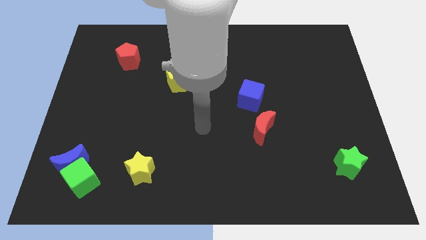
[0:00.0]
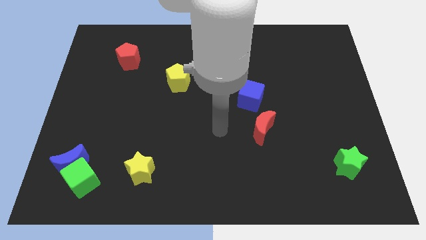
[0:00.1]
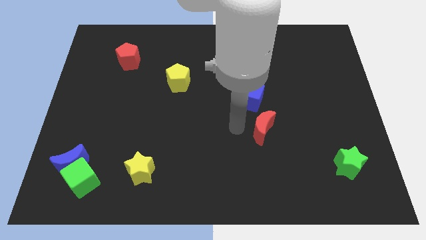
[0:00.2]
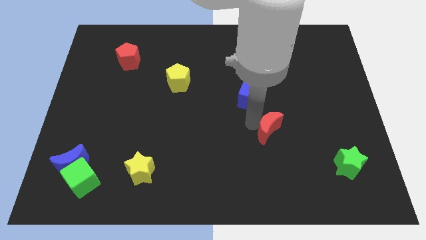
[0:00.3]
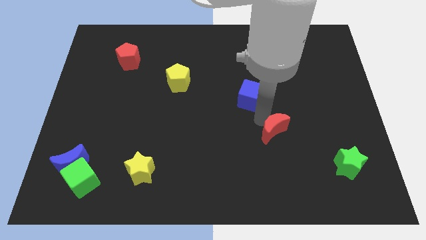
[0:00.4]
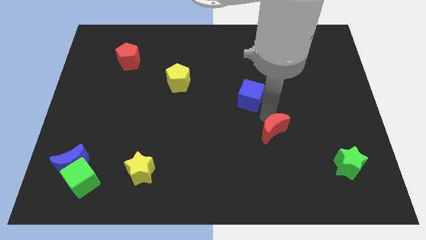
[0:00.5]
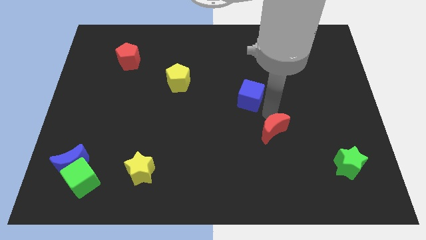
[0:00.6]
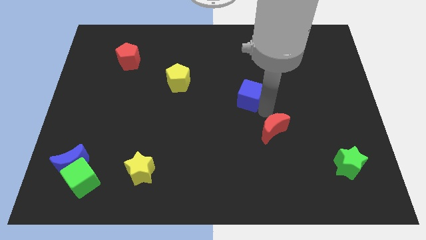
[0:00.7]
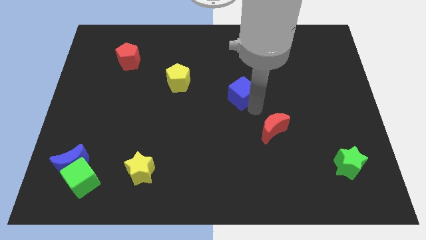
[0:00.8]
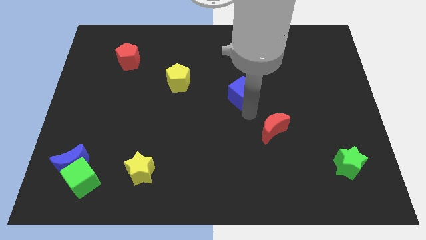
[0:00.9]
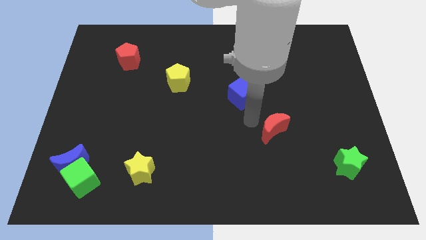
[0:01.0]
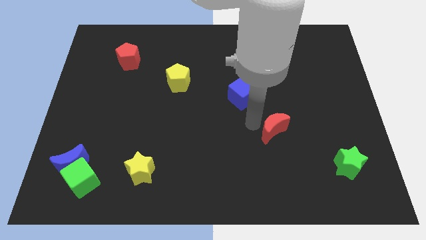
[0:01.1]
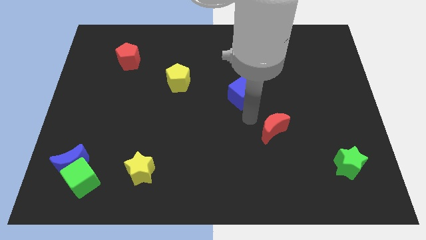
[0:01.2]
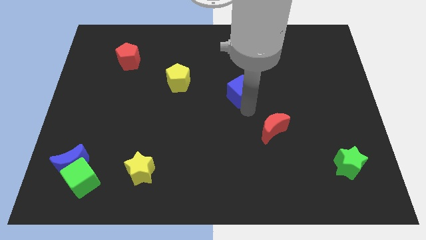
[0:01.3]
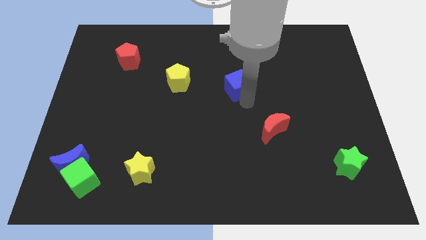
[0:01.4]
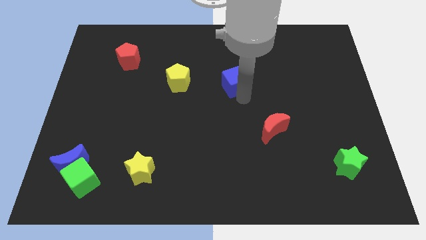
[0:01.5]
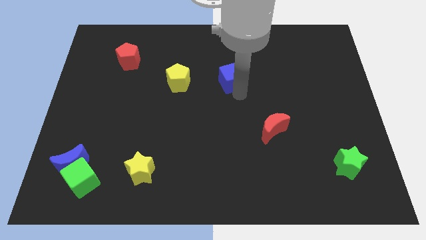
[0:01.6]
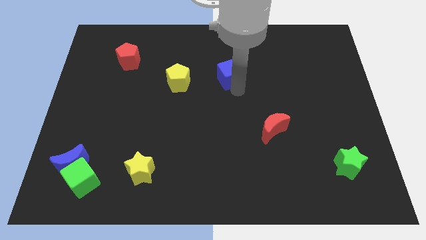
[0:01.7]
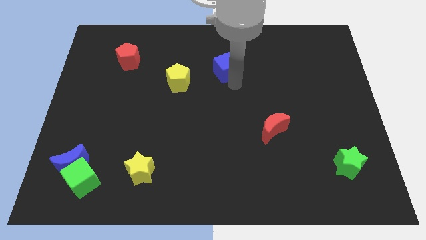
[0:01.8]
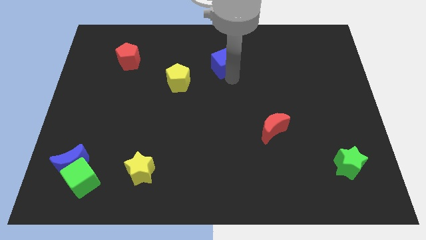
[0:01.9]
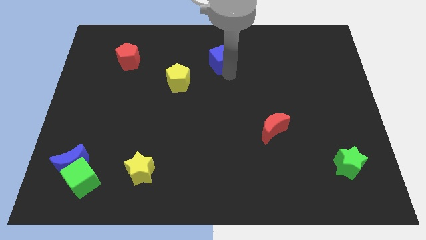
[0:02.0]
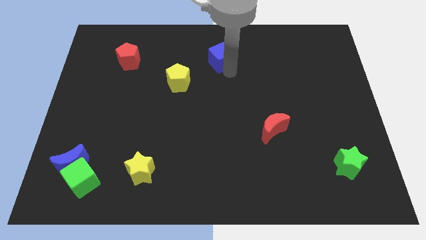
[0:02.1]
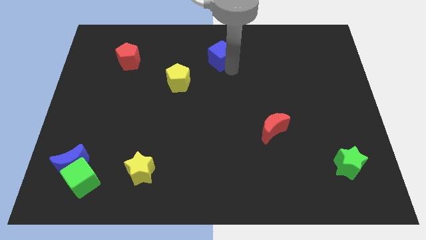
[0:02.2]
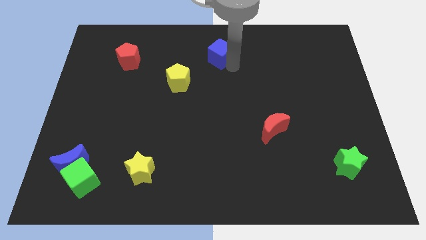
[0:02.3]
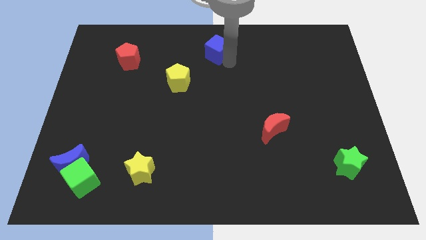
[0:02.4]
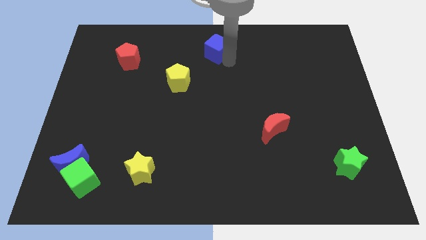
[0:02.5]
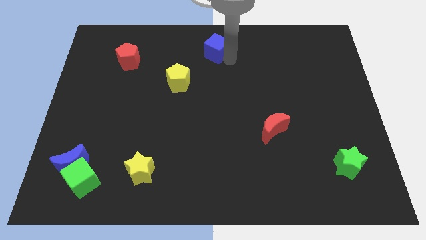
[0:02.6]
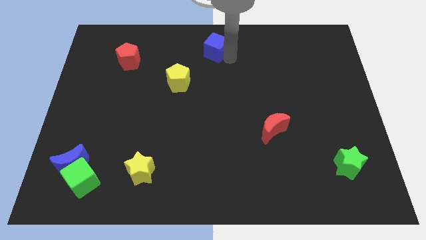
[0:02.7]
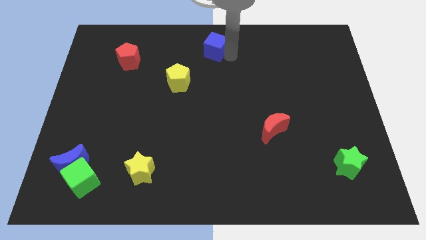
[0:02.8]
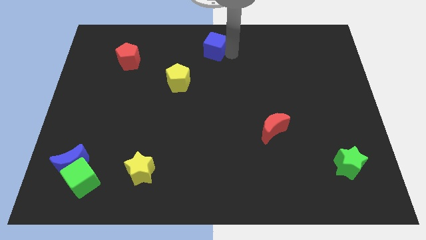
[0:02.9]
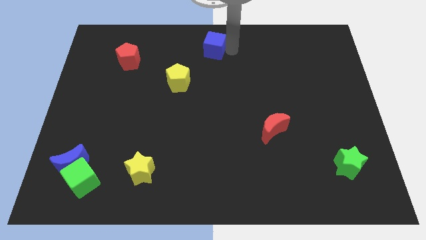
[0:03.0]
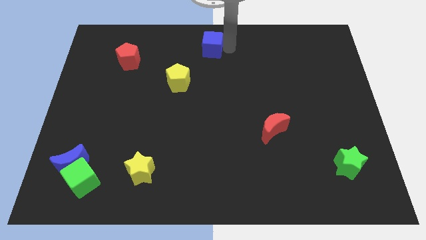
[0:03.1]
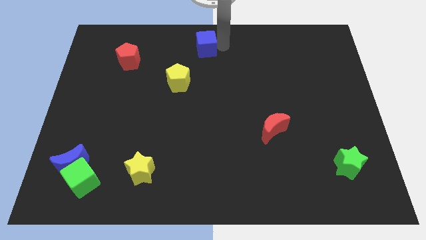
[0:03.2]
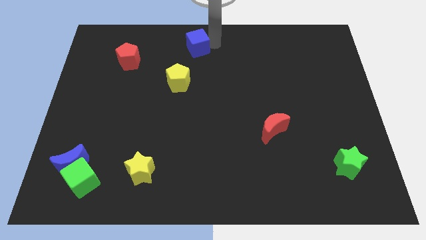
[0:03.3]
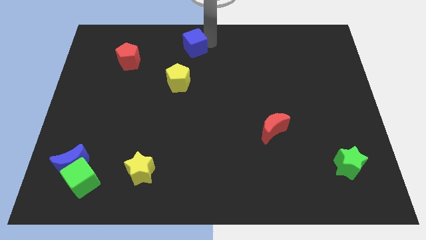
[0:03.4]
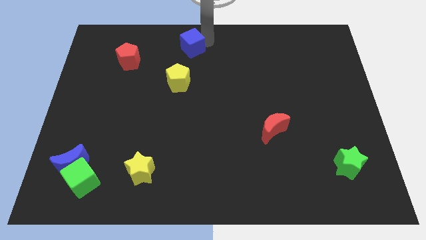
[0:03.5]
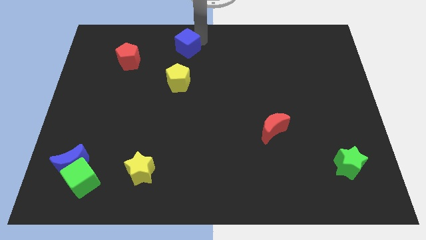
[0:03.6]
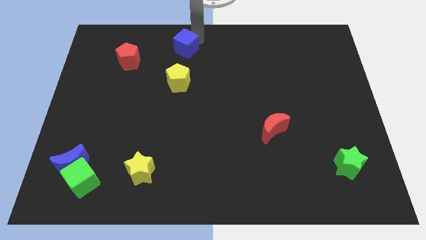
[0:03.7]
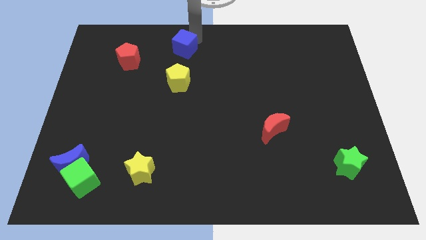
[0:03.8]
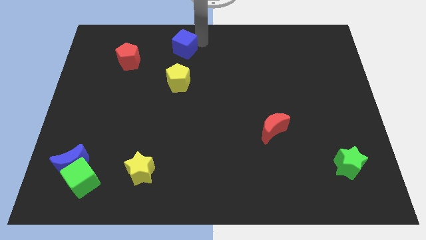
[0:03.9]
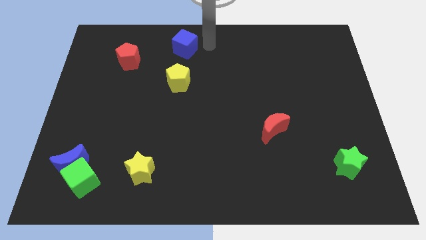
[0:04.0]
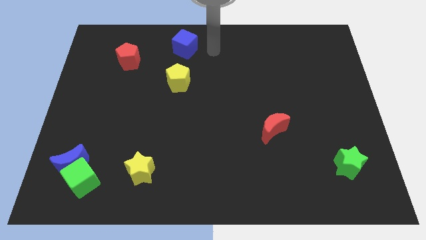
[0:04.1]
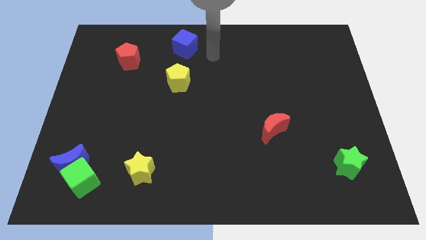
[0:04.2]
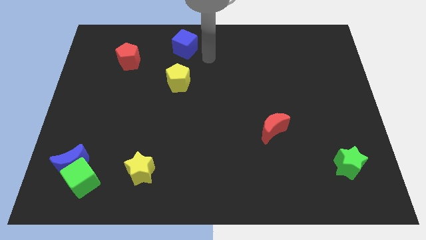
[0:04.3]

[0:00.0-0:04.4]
move the blue cube to the top side of the yellow pentagon

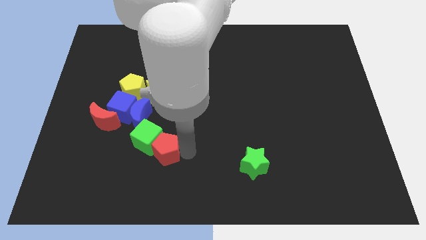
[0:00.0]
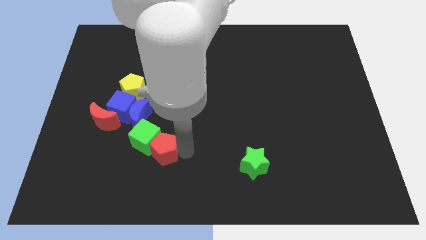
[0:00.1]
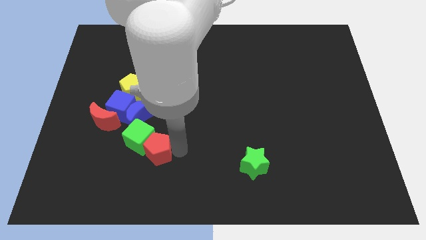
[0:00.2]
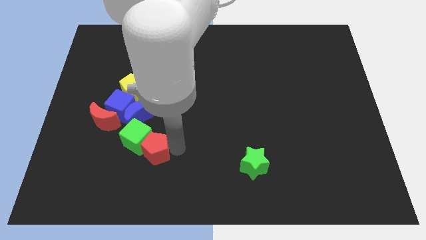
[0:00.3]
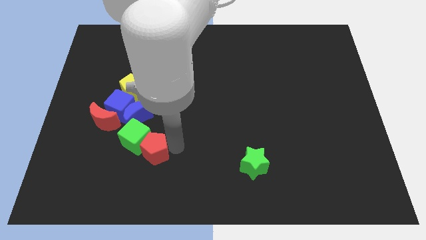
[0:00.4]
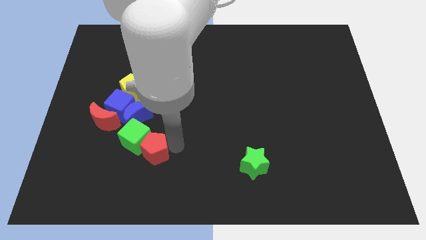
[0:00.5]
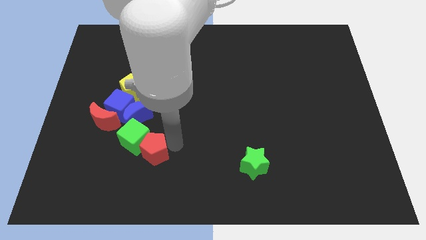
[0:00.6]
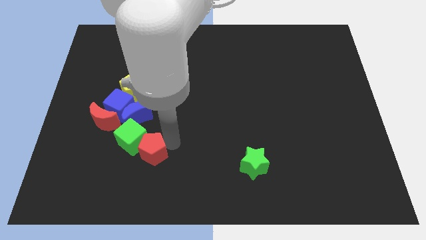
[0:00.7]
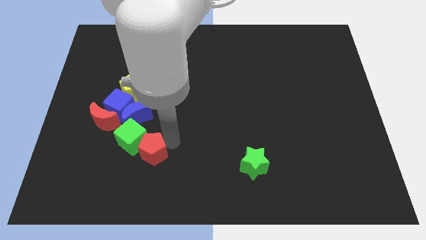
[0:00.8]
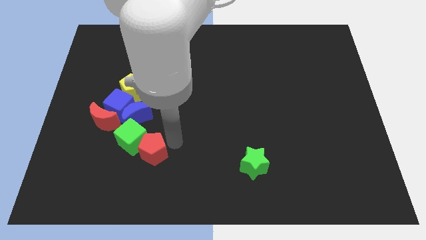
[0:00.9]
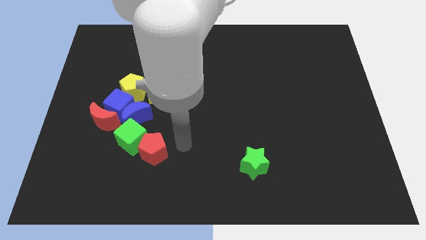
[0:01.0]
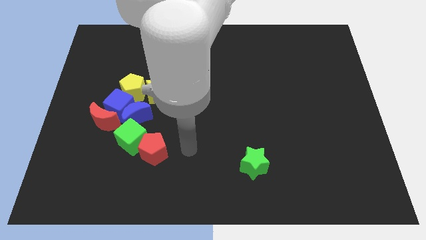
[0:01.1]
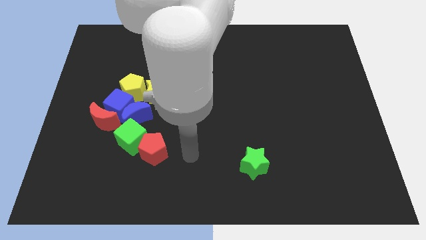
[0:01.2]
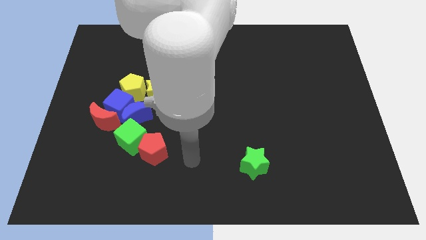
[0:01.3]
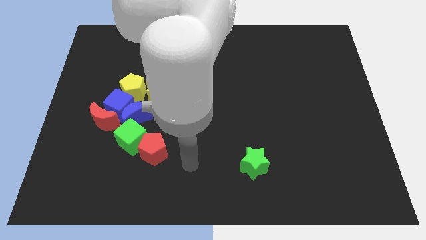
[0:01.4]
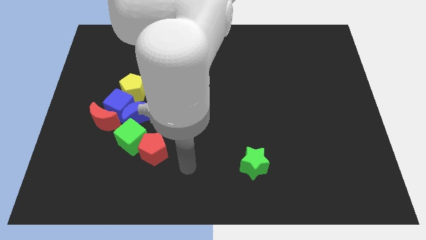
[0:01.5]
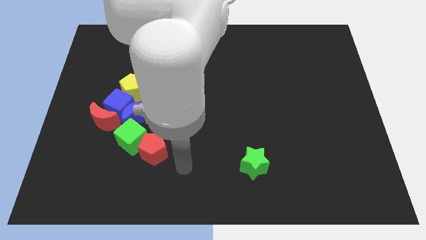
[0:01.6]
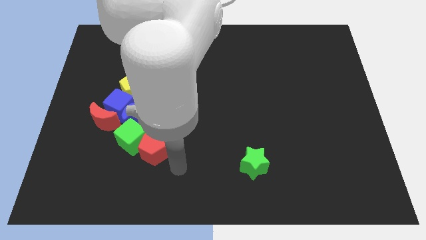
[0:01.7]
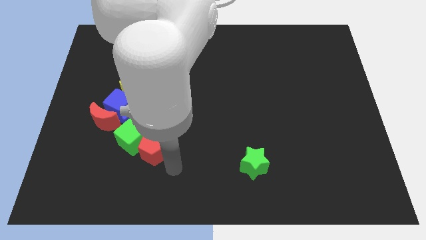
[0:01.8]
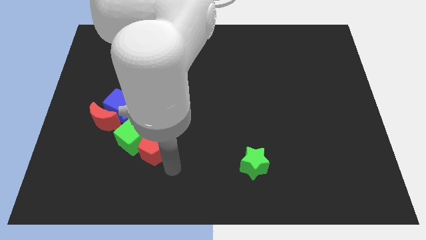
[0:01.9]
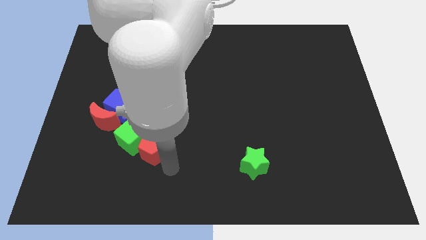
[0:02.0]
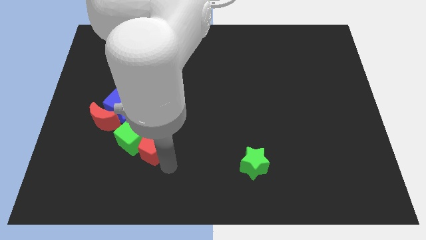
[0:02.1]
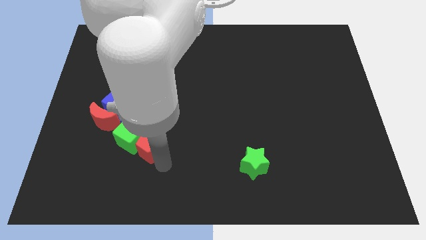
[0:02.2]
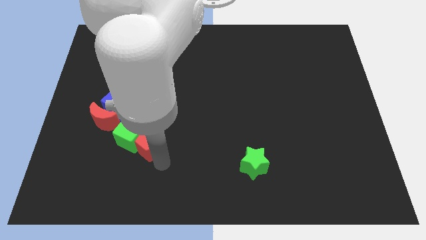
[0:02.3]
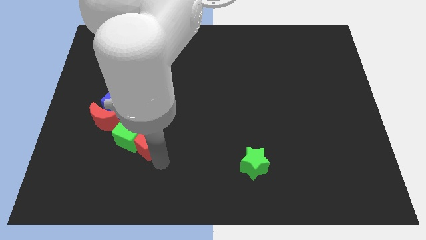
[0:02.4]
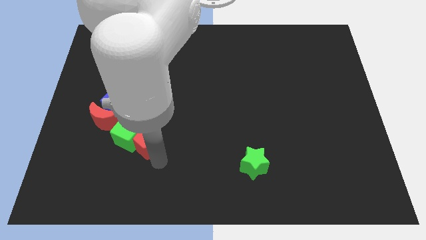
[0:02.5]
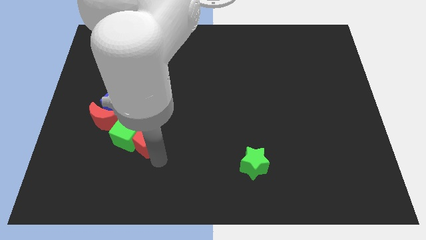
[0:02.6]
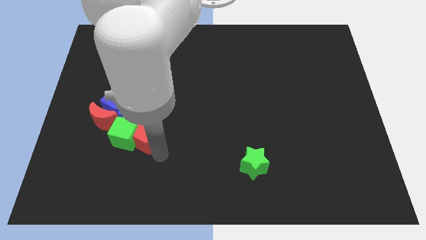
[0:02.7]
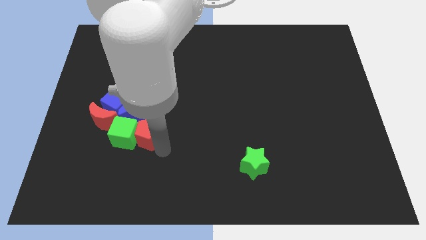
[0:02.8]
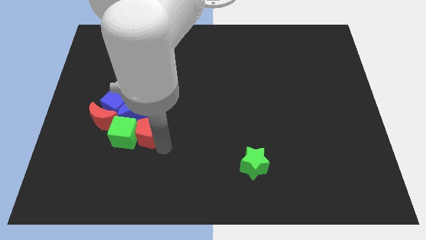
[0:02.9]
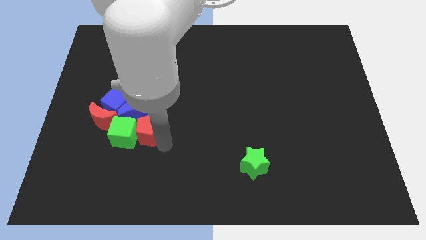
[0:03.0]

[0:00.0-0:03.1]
push red pentagon to the left side

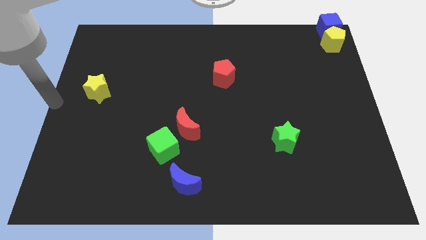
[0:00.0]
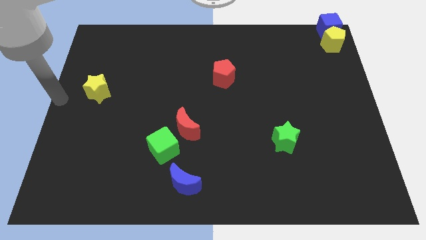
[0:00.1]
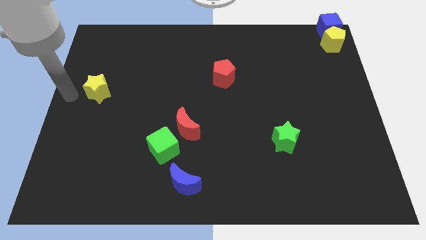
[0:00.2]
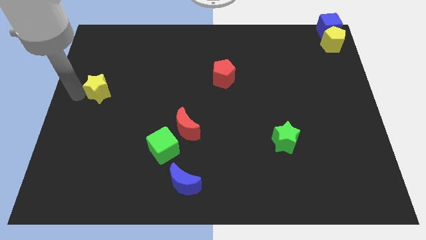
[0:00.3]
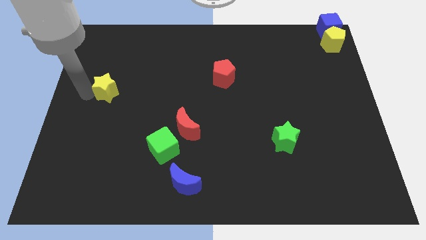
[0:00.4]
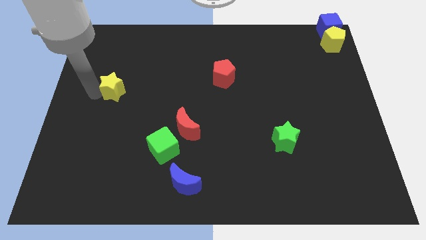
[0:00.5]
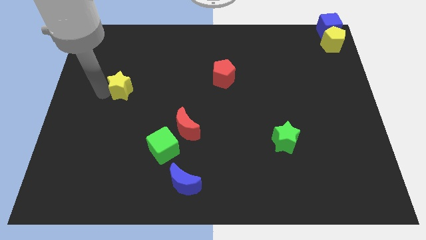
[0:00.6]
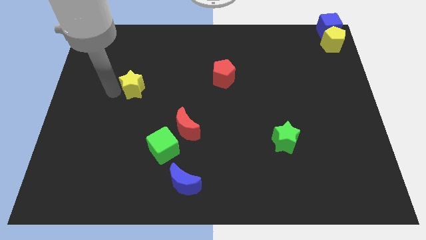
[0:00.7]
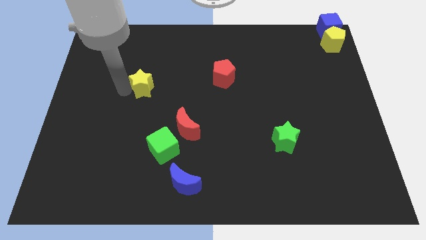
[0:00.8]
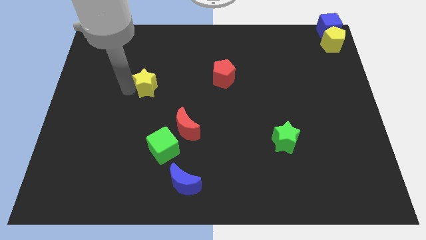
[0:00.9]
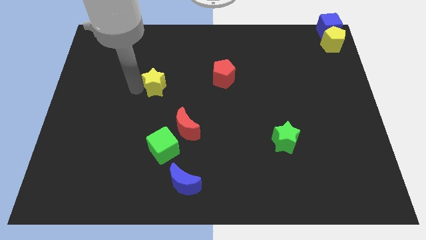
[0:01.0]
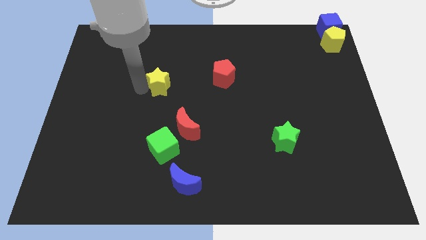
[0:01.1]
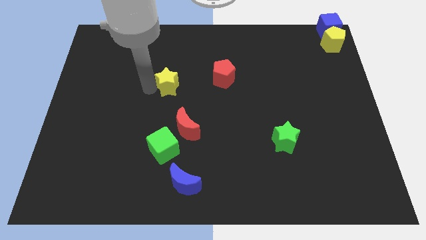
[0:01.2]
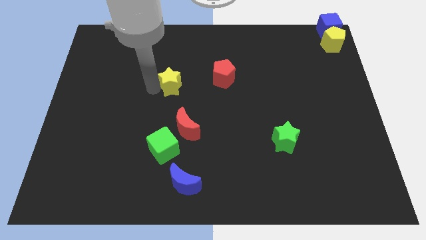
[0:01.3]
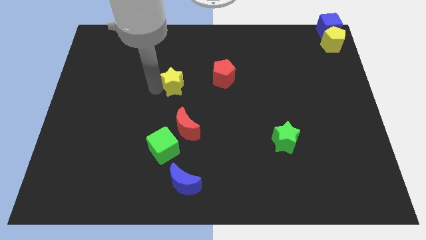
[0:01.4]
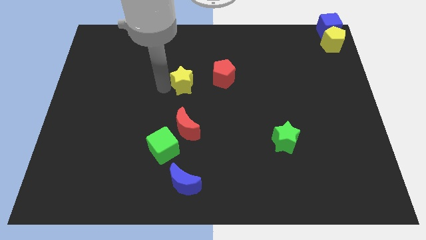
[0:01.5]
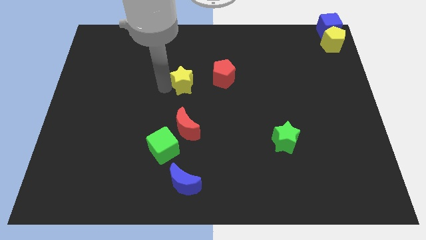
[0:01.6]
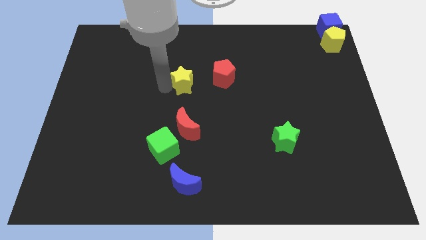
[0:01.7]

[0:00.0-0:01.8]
put the yellow star vertically above the red moon
